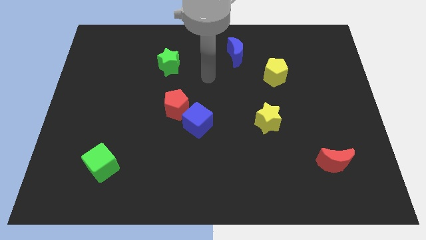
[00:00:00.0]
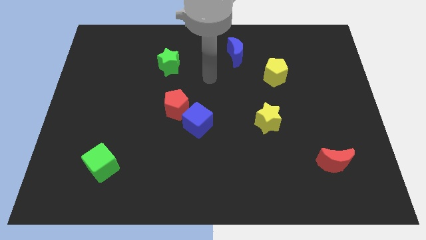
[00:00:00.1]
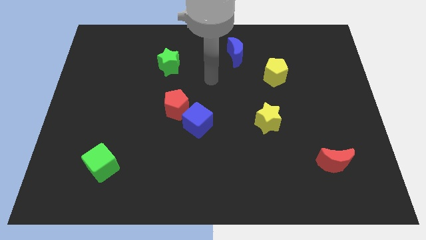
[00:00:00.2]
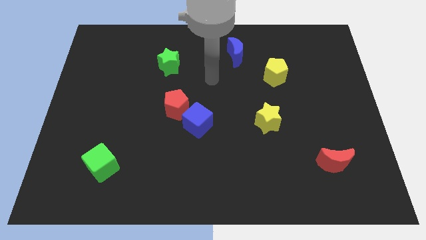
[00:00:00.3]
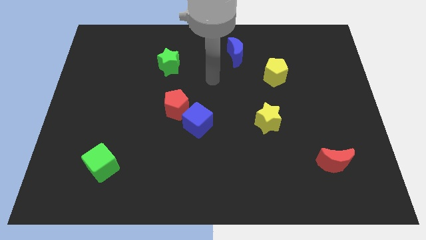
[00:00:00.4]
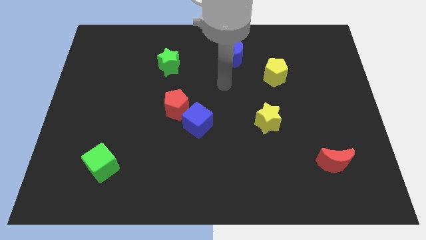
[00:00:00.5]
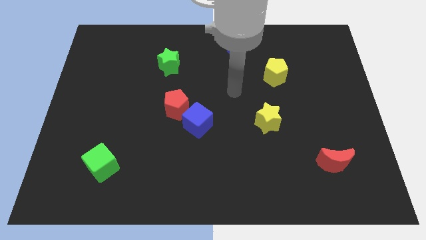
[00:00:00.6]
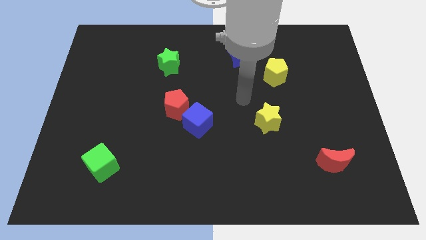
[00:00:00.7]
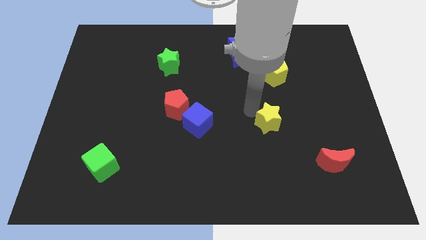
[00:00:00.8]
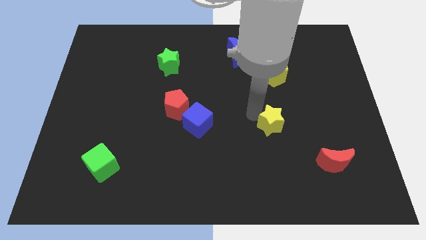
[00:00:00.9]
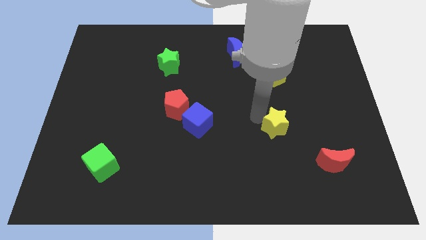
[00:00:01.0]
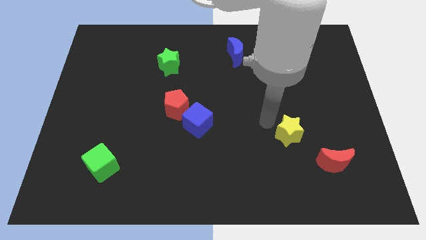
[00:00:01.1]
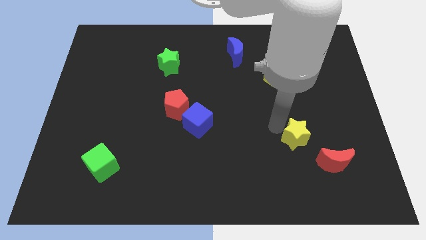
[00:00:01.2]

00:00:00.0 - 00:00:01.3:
move your arm close to the yellow star

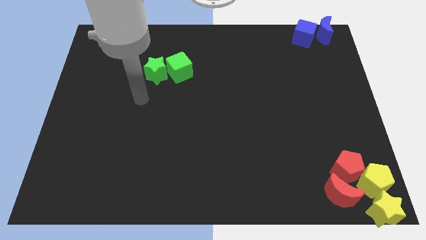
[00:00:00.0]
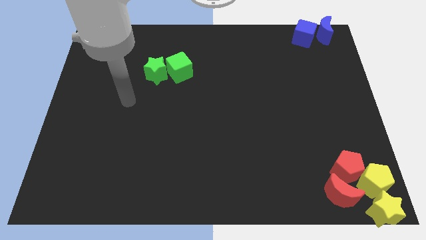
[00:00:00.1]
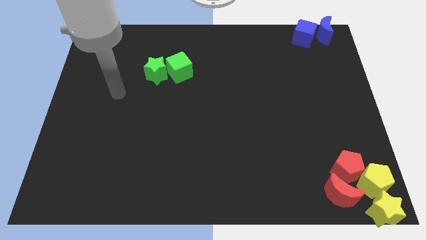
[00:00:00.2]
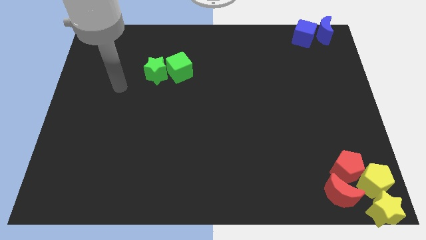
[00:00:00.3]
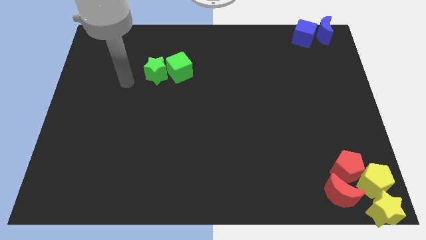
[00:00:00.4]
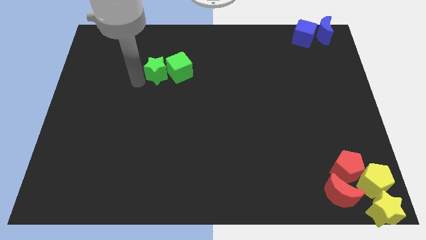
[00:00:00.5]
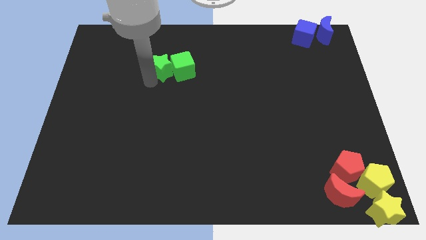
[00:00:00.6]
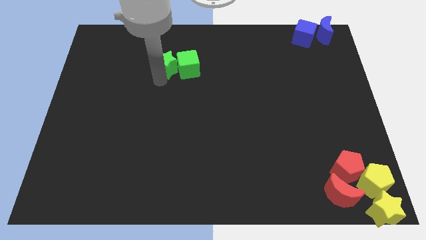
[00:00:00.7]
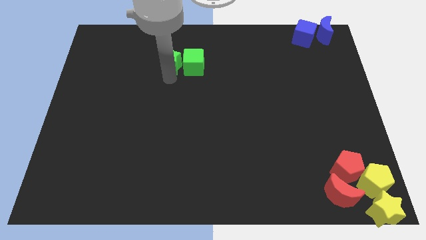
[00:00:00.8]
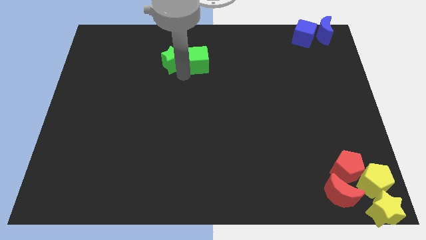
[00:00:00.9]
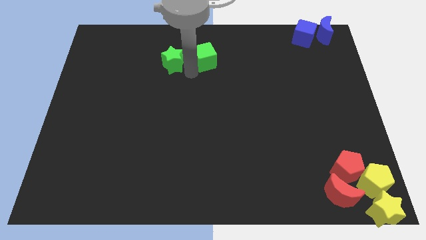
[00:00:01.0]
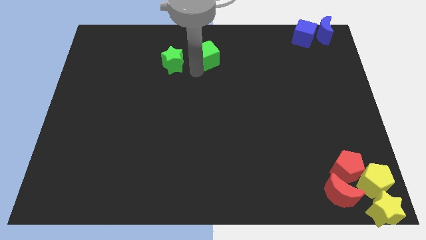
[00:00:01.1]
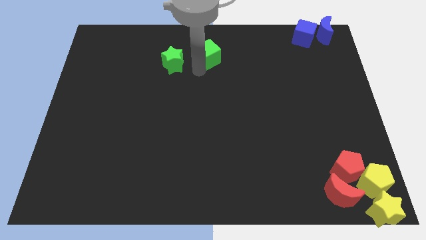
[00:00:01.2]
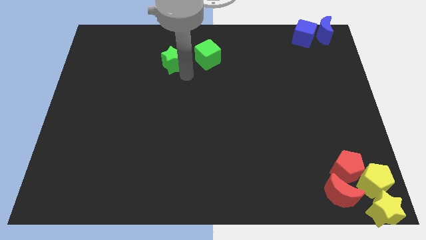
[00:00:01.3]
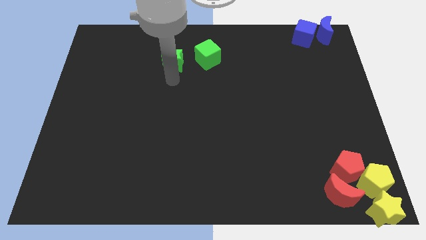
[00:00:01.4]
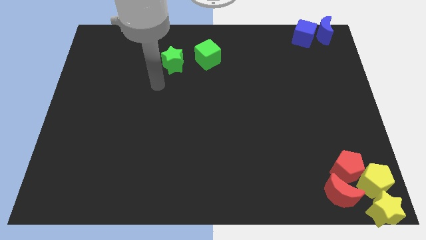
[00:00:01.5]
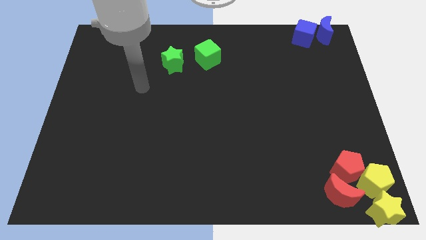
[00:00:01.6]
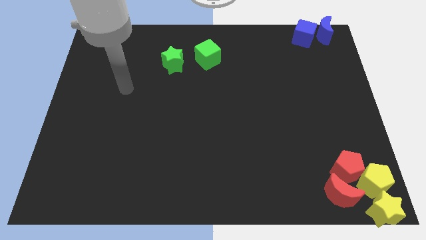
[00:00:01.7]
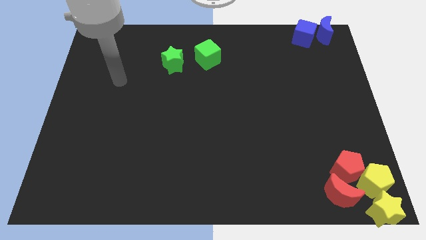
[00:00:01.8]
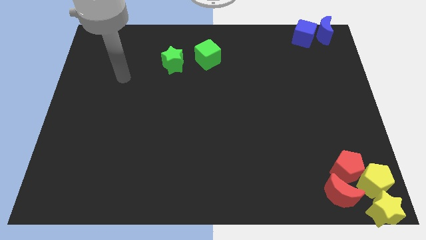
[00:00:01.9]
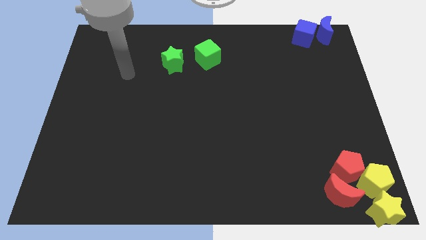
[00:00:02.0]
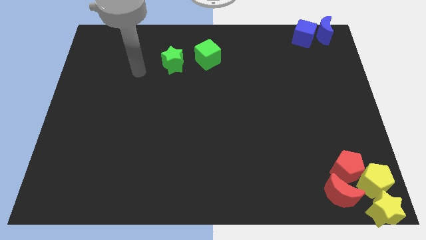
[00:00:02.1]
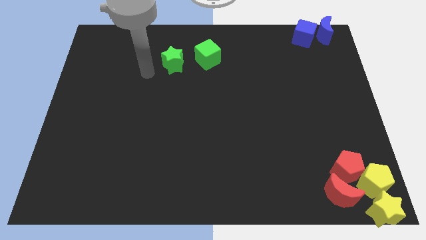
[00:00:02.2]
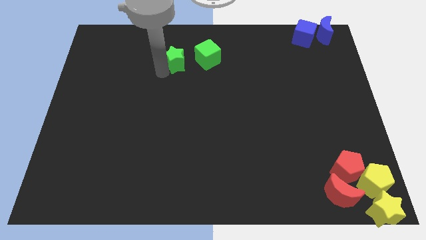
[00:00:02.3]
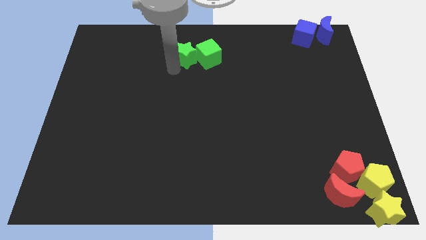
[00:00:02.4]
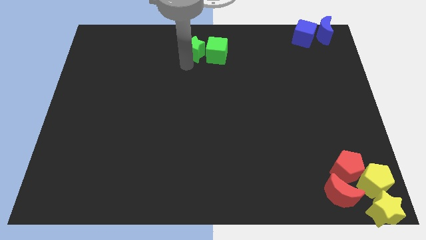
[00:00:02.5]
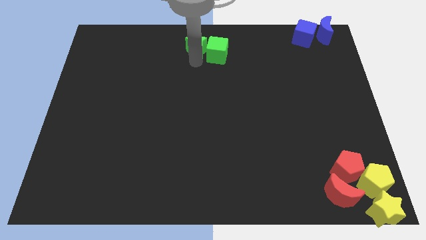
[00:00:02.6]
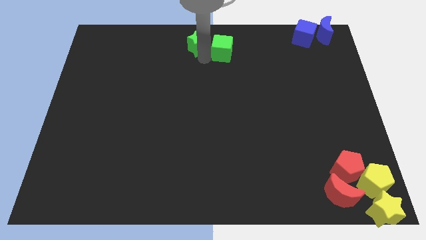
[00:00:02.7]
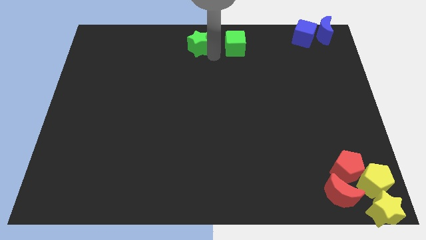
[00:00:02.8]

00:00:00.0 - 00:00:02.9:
move the green blocks towards the top center of the board

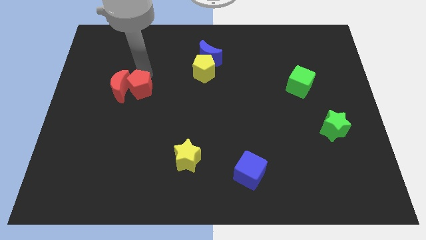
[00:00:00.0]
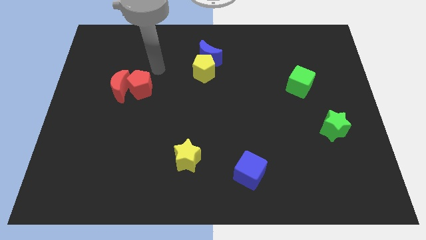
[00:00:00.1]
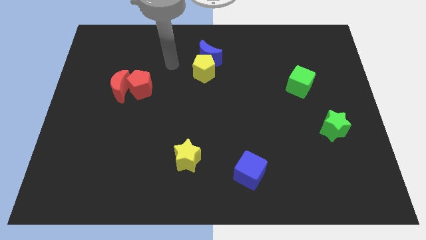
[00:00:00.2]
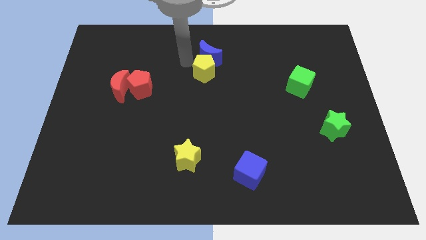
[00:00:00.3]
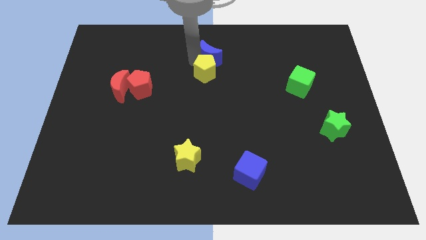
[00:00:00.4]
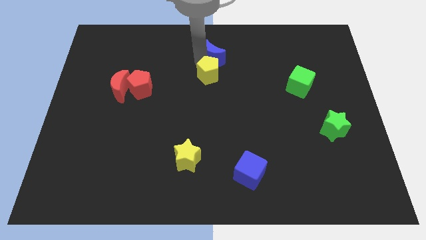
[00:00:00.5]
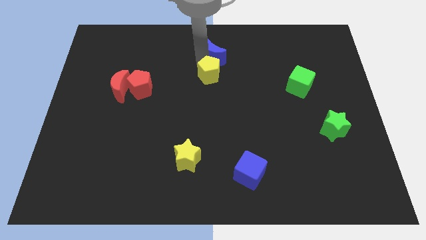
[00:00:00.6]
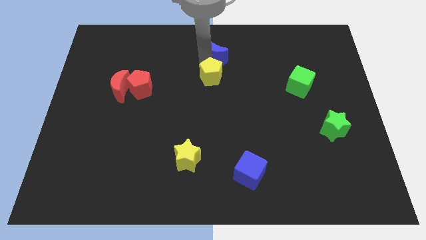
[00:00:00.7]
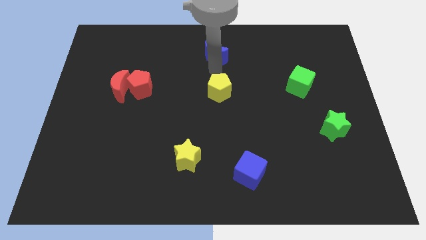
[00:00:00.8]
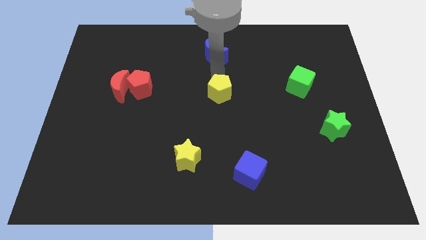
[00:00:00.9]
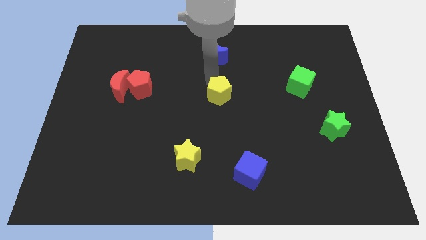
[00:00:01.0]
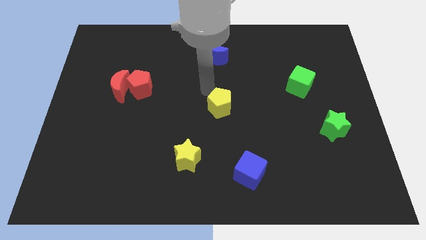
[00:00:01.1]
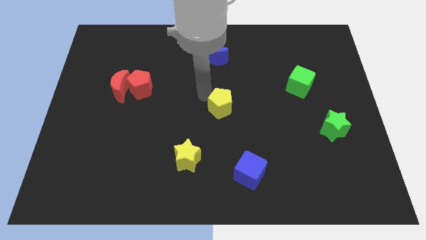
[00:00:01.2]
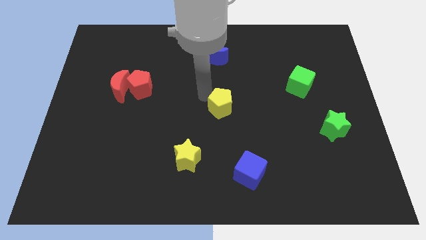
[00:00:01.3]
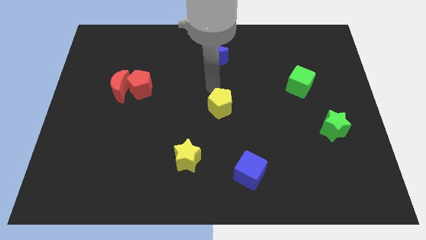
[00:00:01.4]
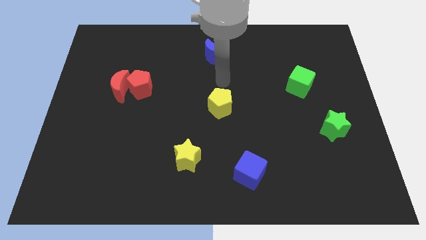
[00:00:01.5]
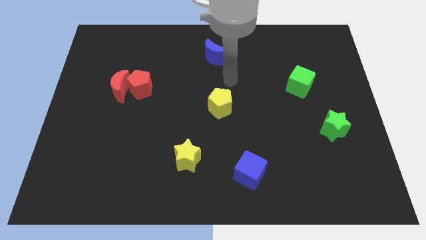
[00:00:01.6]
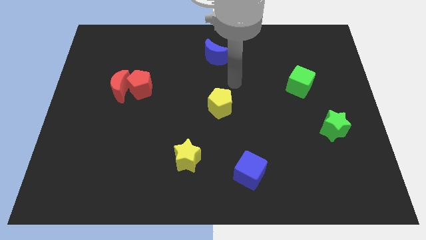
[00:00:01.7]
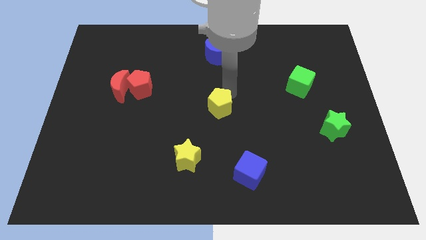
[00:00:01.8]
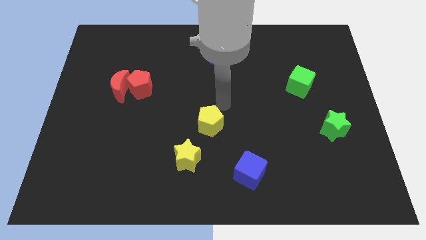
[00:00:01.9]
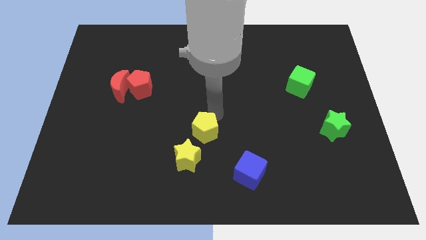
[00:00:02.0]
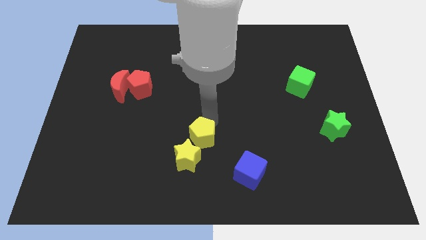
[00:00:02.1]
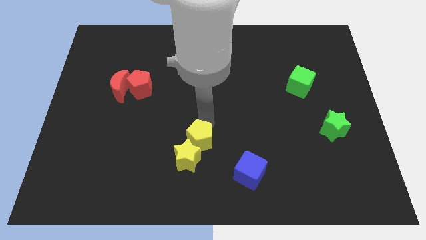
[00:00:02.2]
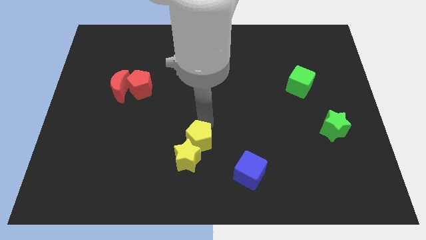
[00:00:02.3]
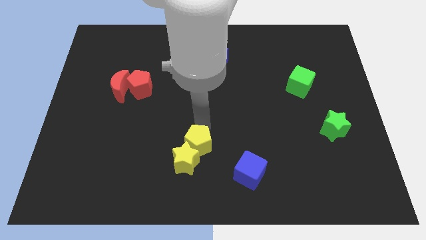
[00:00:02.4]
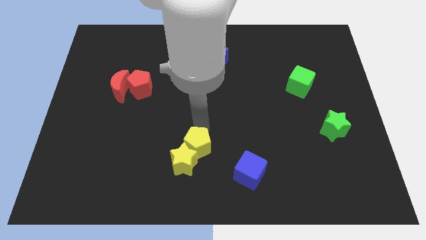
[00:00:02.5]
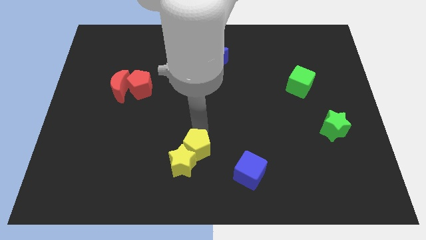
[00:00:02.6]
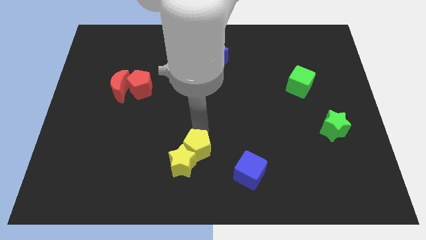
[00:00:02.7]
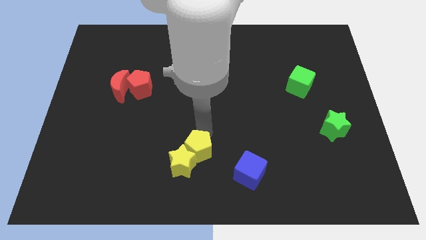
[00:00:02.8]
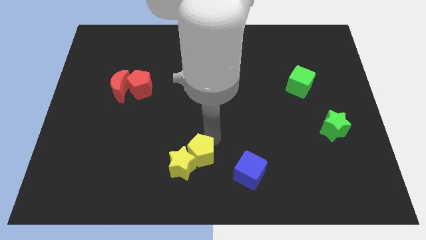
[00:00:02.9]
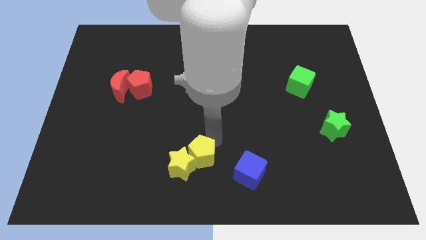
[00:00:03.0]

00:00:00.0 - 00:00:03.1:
push the yellow pentagon into the yellow star

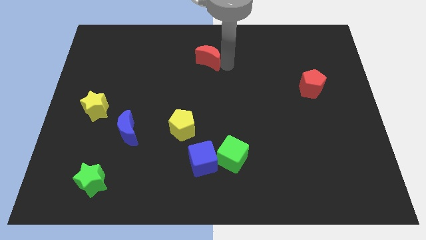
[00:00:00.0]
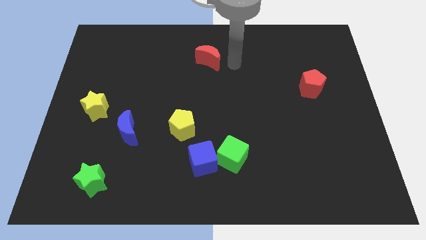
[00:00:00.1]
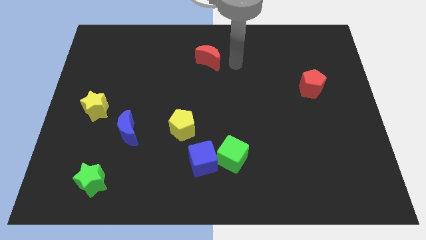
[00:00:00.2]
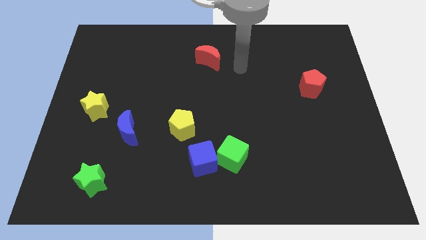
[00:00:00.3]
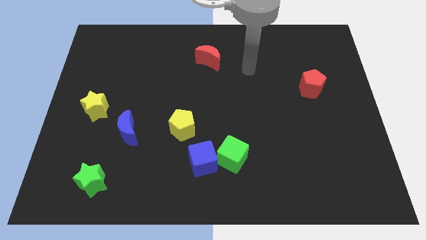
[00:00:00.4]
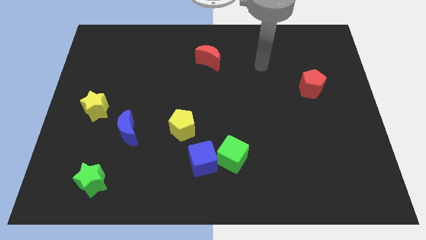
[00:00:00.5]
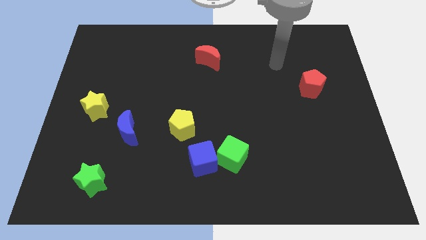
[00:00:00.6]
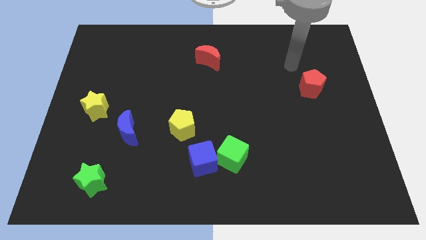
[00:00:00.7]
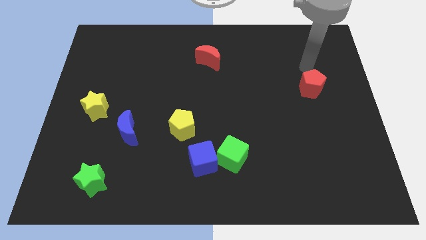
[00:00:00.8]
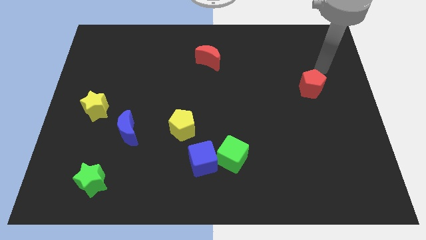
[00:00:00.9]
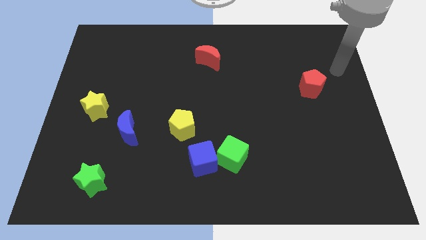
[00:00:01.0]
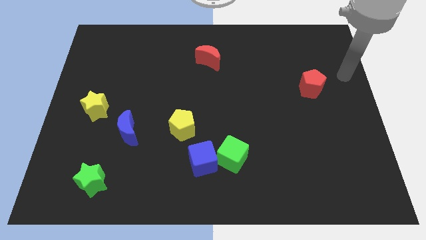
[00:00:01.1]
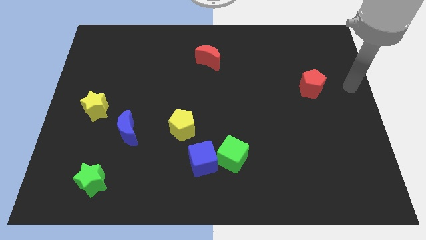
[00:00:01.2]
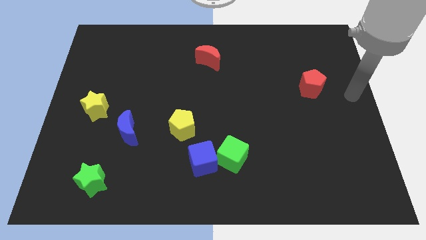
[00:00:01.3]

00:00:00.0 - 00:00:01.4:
place your arm to the right side of red pentagon

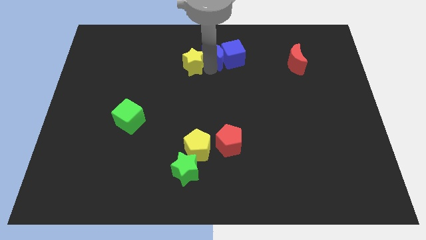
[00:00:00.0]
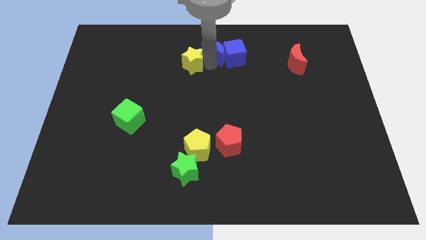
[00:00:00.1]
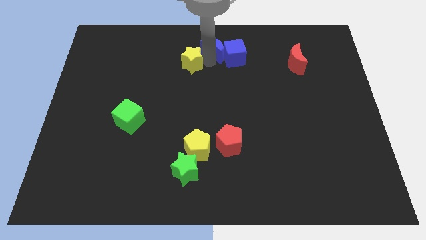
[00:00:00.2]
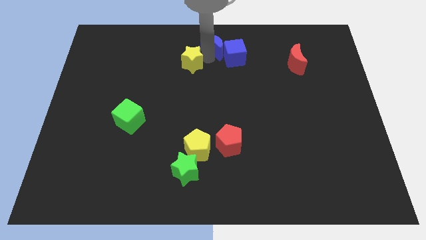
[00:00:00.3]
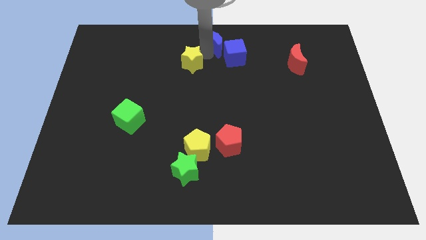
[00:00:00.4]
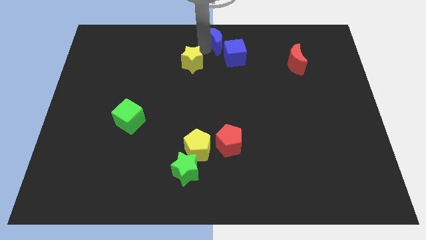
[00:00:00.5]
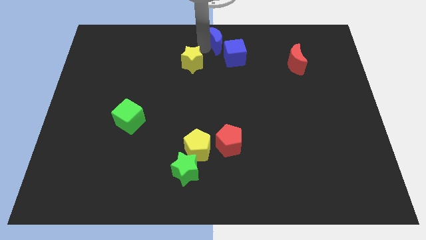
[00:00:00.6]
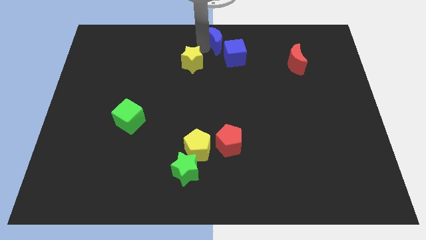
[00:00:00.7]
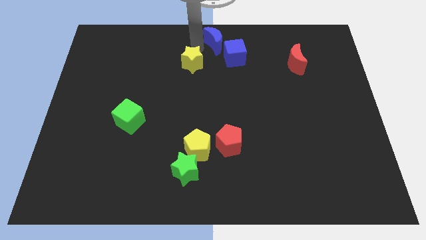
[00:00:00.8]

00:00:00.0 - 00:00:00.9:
move the blue moon to the top center of the board
